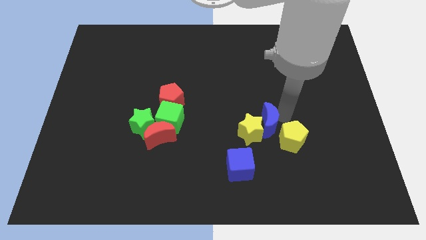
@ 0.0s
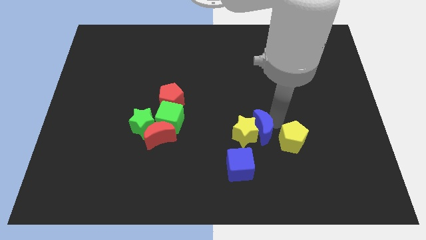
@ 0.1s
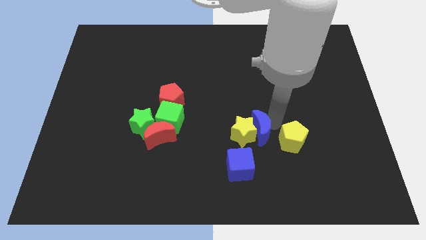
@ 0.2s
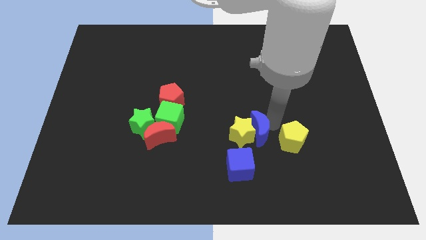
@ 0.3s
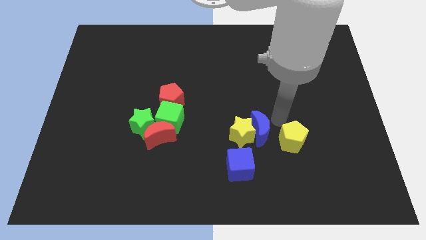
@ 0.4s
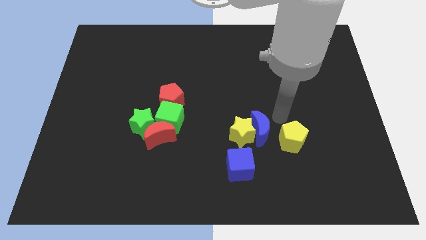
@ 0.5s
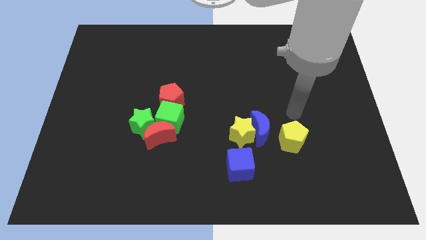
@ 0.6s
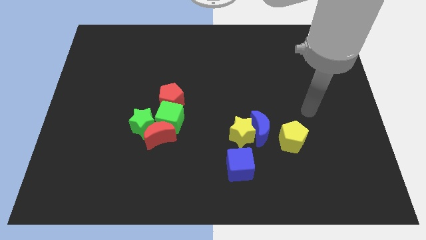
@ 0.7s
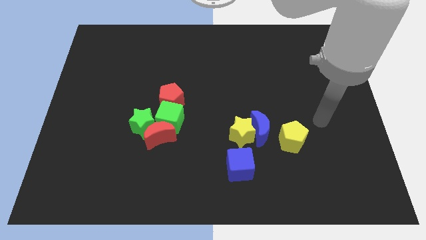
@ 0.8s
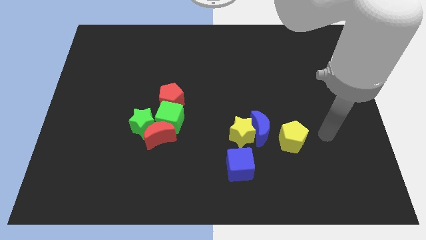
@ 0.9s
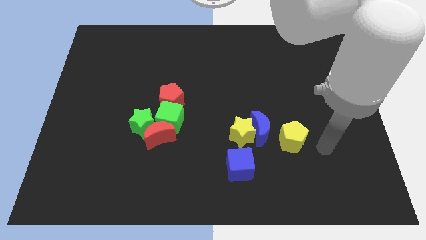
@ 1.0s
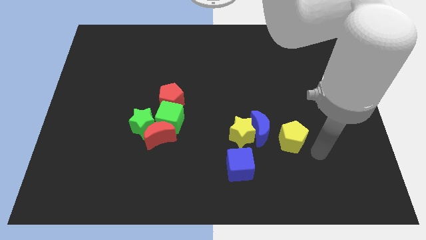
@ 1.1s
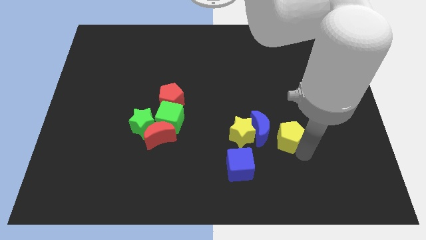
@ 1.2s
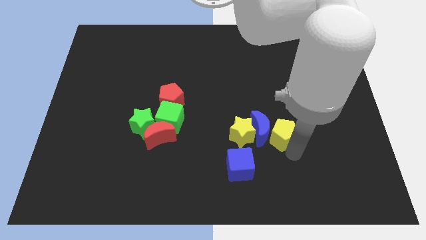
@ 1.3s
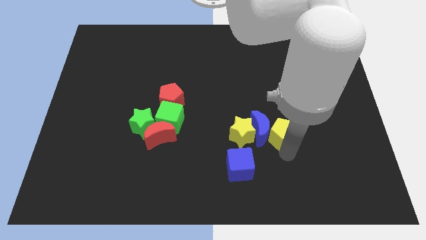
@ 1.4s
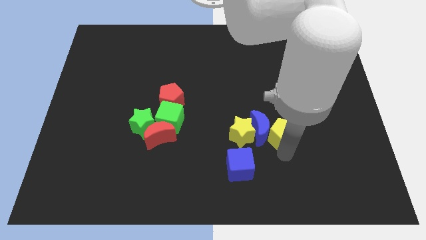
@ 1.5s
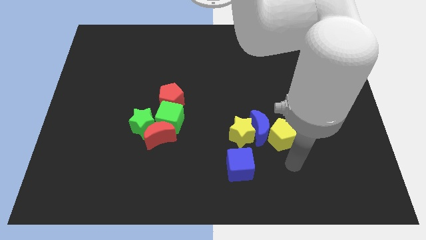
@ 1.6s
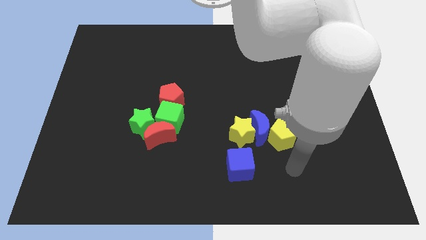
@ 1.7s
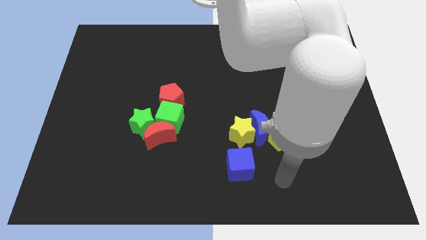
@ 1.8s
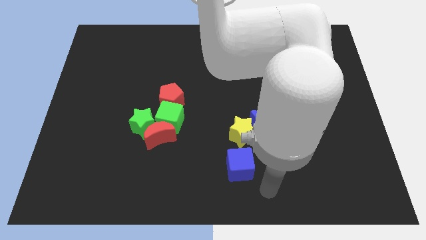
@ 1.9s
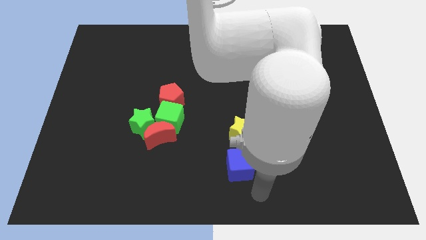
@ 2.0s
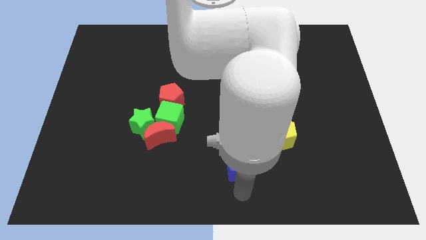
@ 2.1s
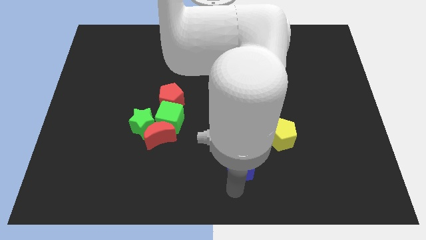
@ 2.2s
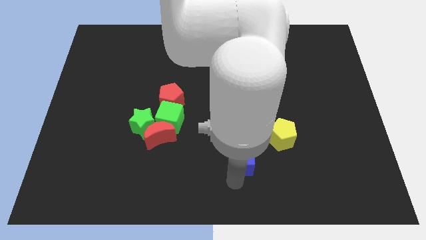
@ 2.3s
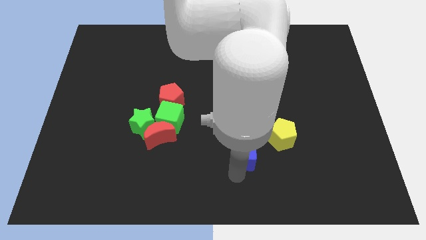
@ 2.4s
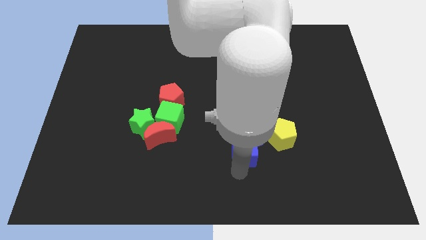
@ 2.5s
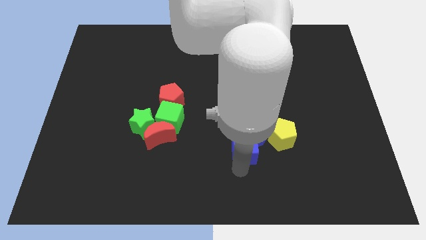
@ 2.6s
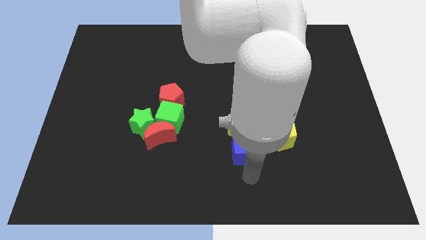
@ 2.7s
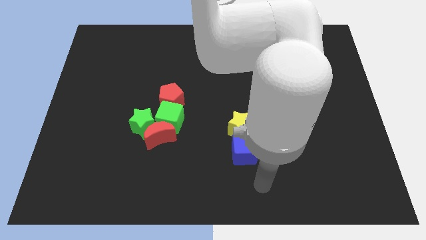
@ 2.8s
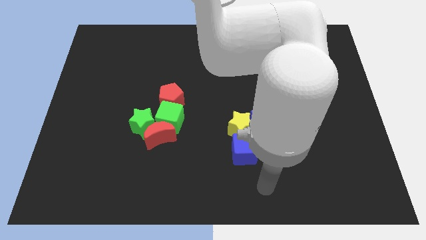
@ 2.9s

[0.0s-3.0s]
adjust yellow and blue blocks at the bottom of the board

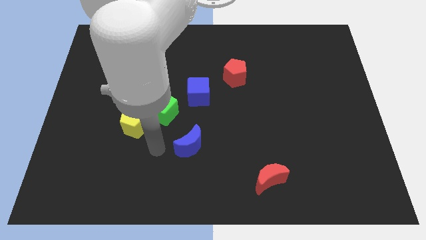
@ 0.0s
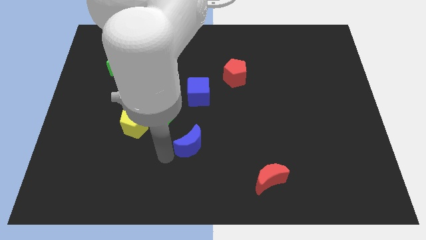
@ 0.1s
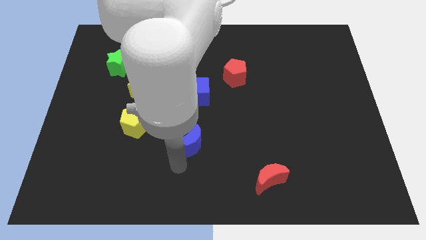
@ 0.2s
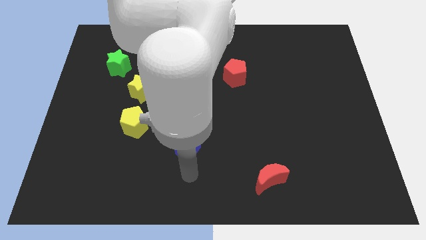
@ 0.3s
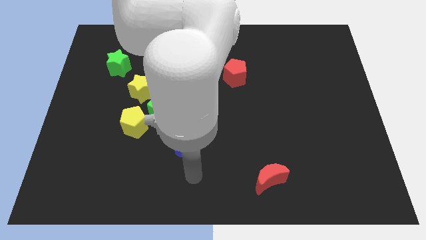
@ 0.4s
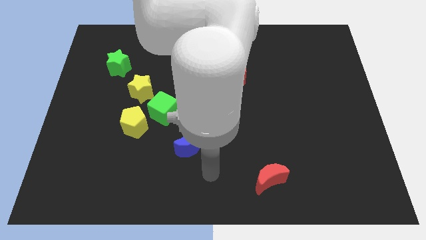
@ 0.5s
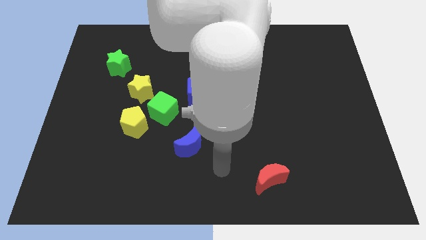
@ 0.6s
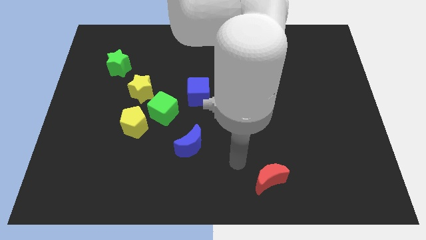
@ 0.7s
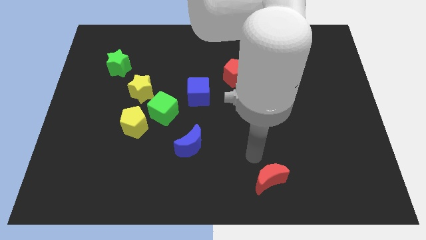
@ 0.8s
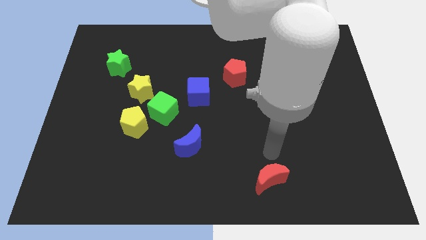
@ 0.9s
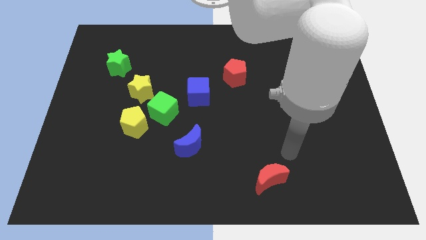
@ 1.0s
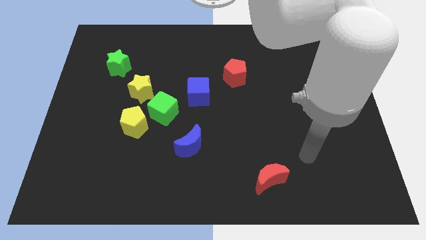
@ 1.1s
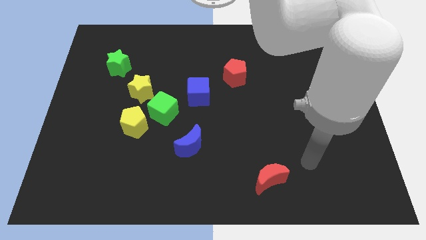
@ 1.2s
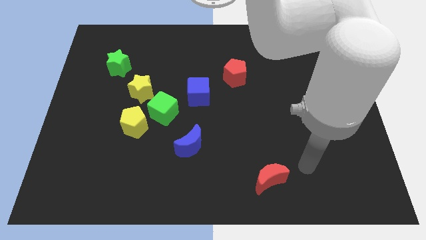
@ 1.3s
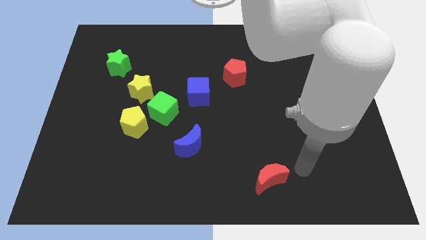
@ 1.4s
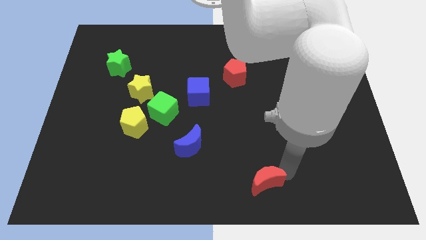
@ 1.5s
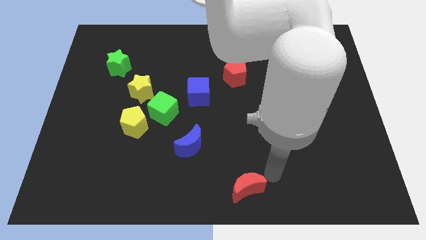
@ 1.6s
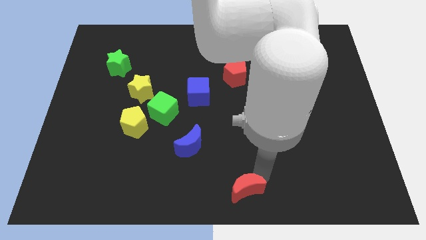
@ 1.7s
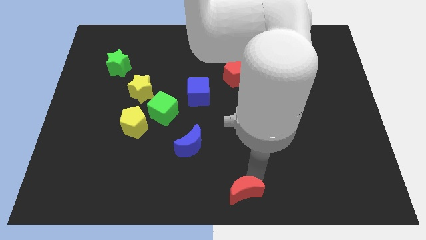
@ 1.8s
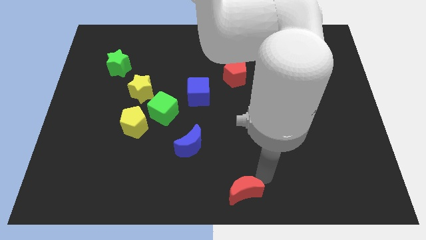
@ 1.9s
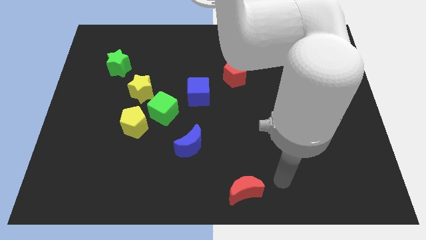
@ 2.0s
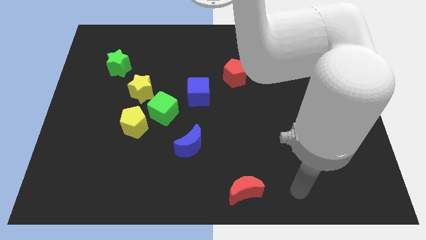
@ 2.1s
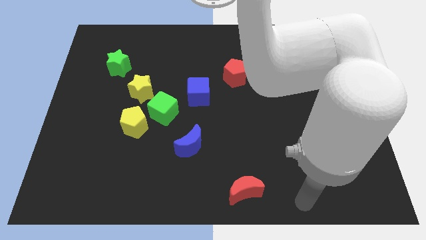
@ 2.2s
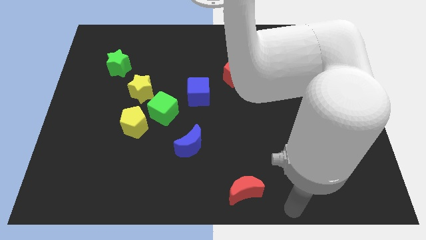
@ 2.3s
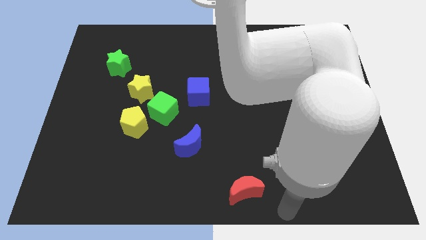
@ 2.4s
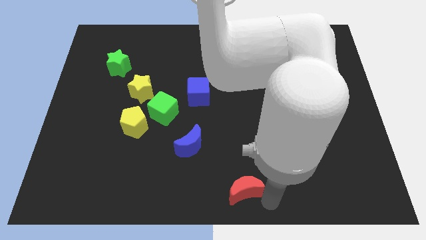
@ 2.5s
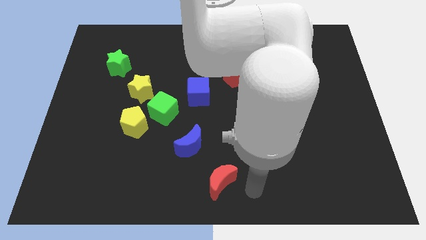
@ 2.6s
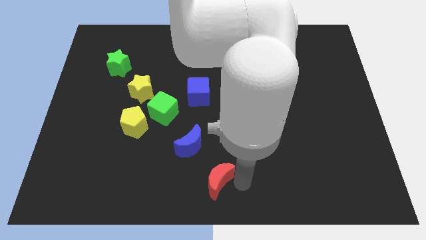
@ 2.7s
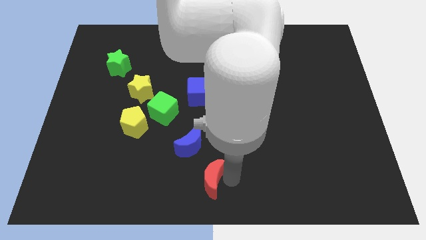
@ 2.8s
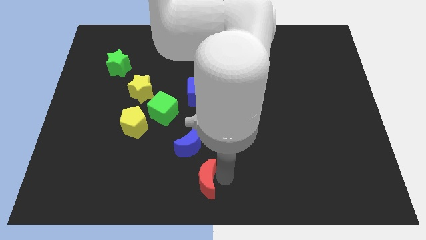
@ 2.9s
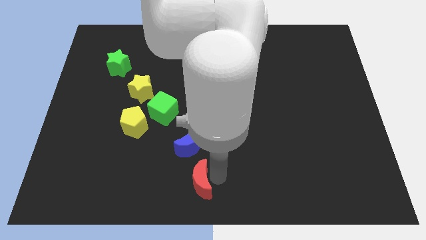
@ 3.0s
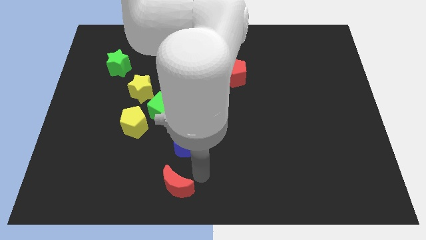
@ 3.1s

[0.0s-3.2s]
slide the red crescent below the blue cube

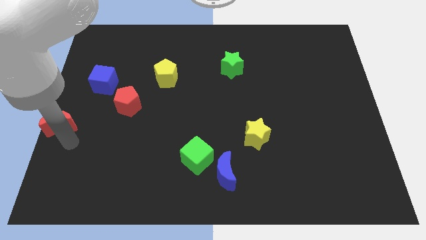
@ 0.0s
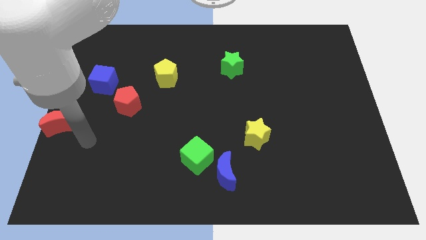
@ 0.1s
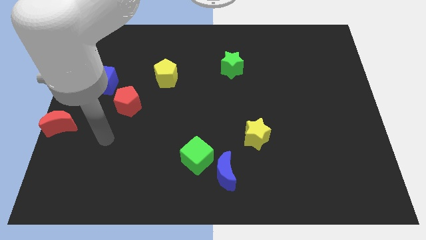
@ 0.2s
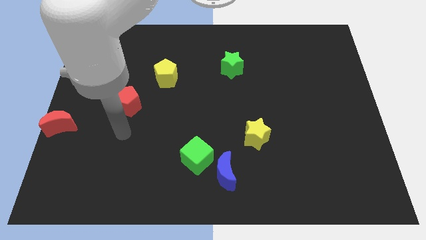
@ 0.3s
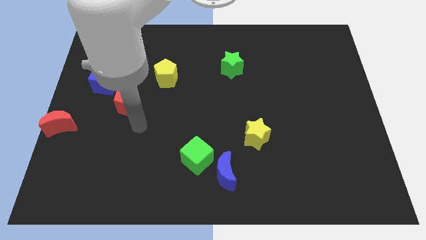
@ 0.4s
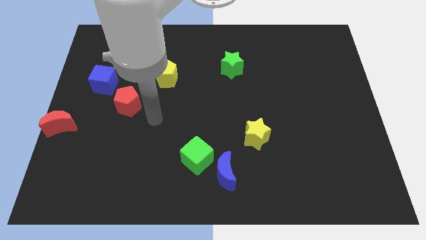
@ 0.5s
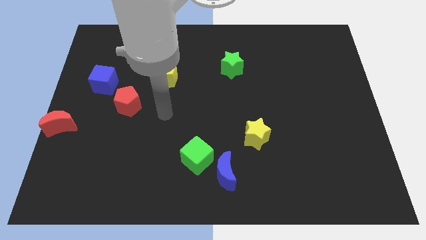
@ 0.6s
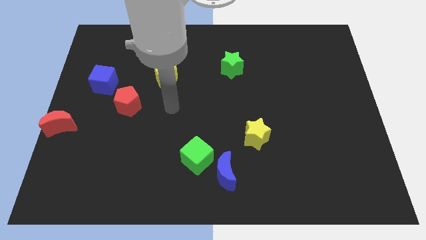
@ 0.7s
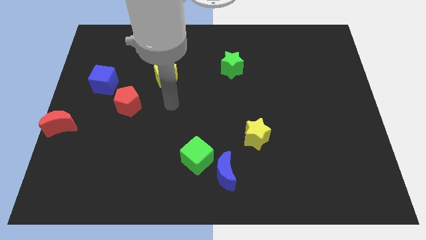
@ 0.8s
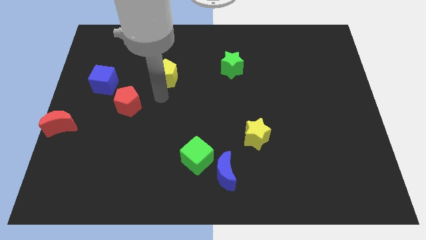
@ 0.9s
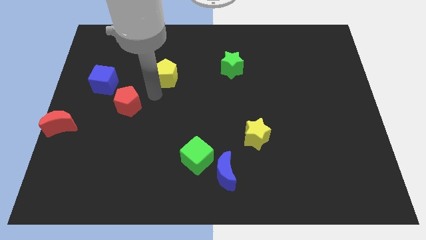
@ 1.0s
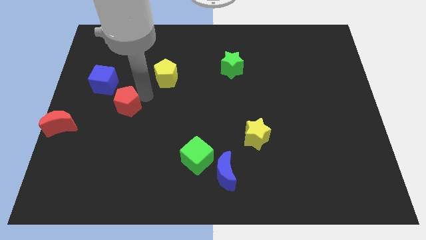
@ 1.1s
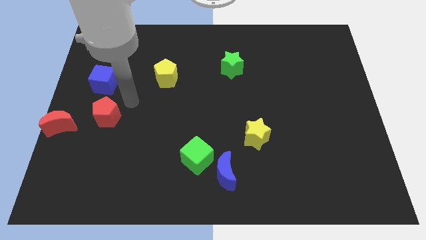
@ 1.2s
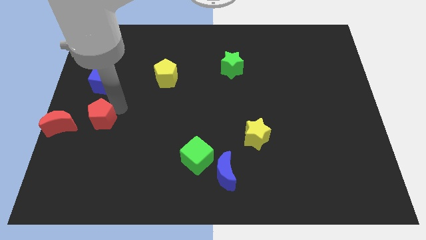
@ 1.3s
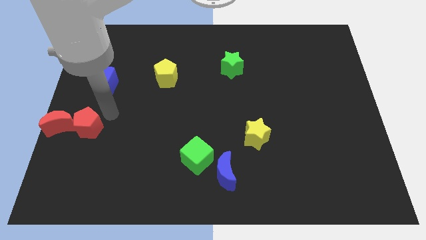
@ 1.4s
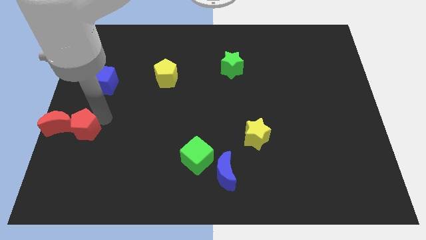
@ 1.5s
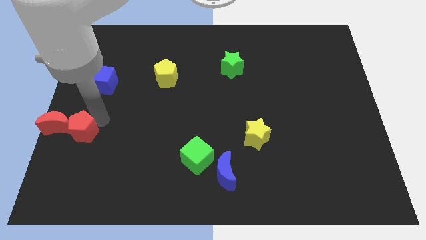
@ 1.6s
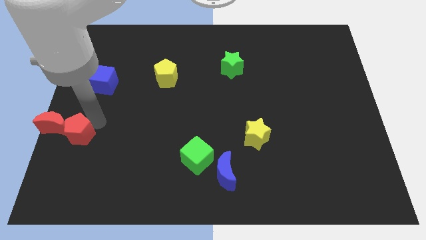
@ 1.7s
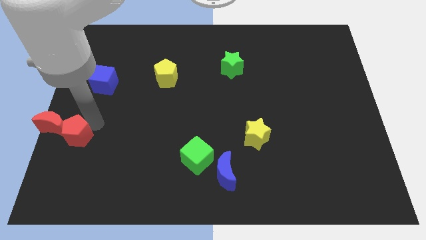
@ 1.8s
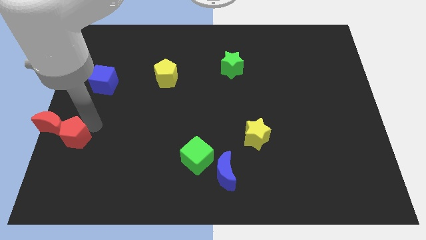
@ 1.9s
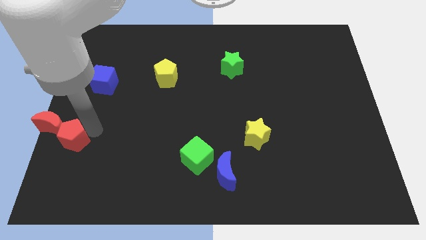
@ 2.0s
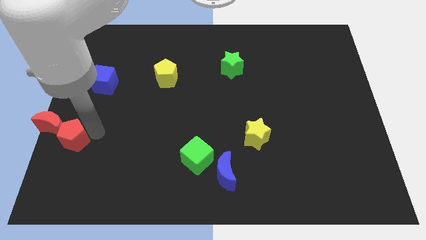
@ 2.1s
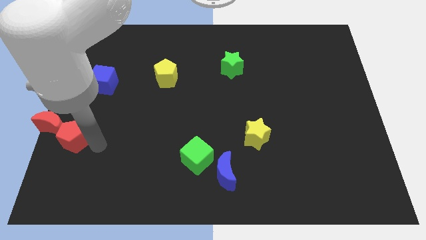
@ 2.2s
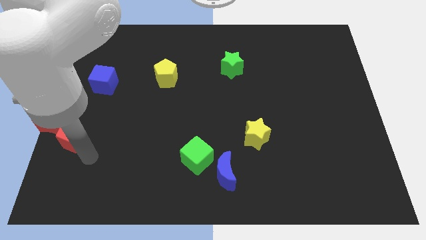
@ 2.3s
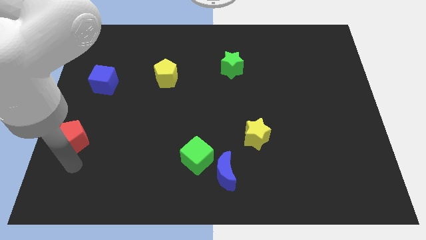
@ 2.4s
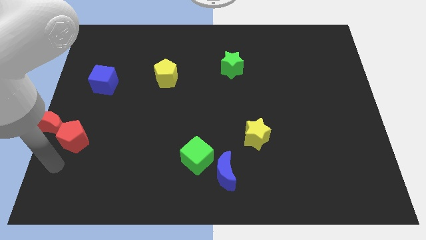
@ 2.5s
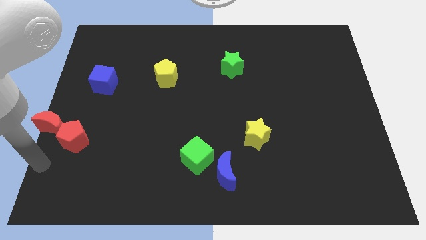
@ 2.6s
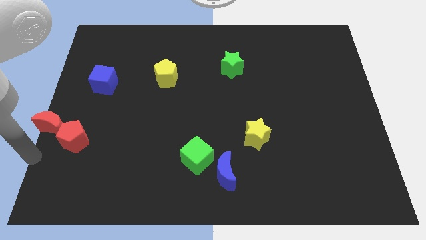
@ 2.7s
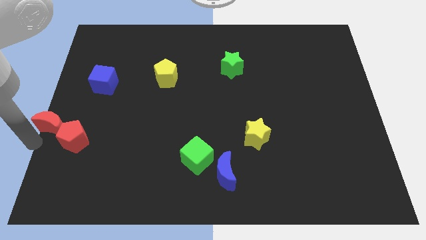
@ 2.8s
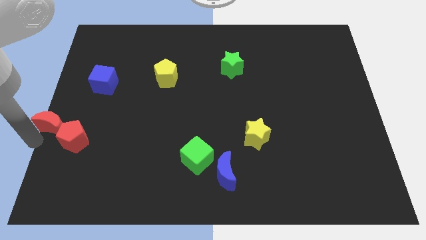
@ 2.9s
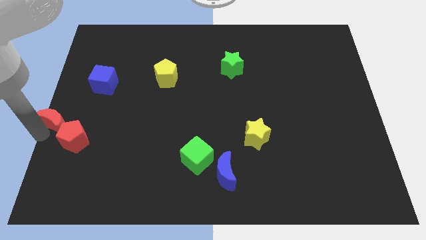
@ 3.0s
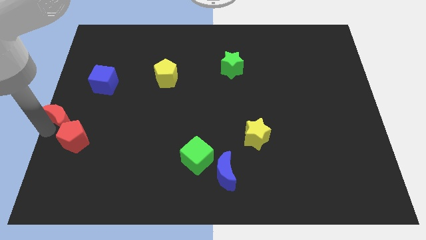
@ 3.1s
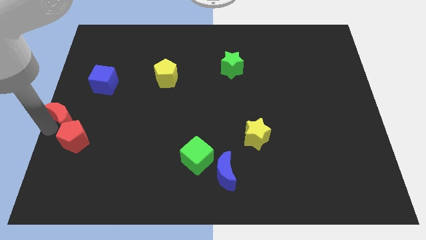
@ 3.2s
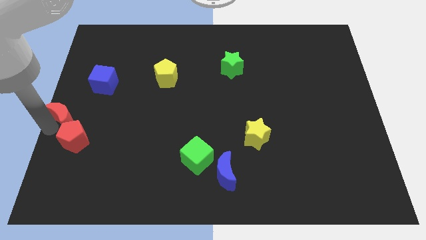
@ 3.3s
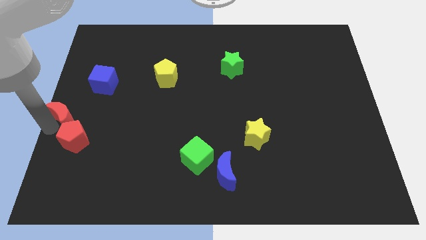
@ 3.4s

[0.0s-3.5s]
push the red pentagon into the red moon
